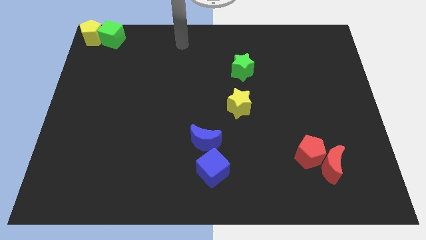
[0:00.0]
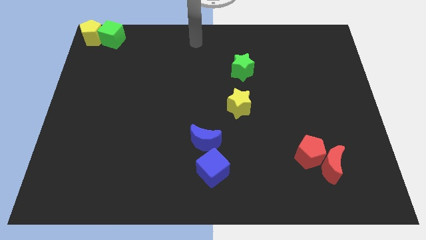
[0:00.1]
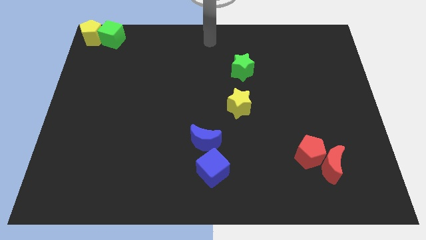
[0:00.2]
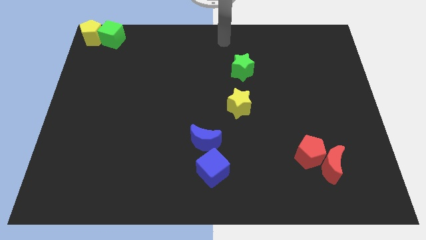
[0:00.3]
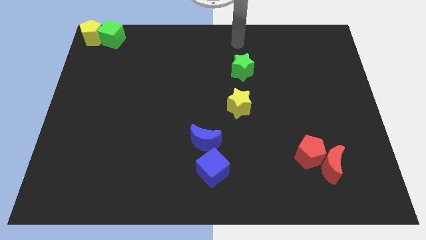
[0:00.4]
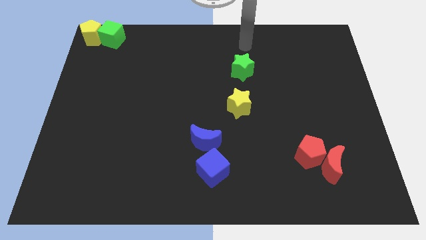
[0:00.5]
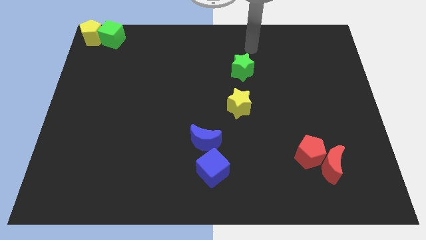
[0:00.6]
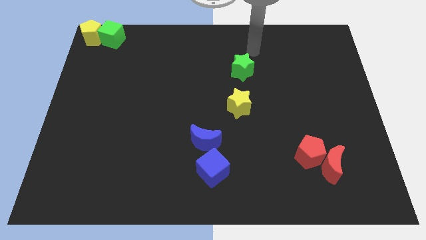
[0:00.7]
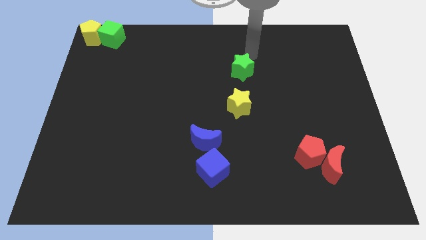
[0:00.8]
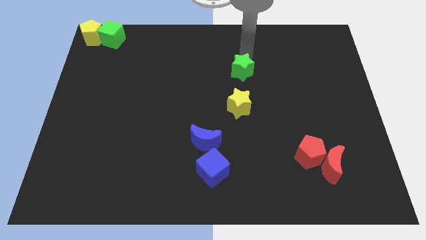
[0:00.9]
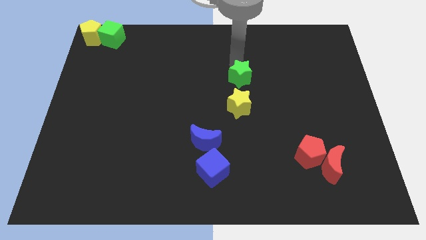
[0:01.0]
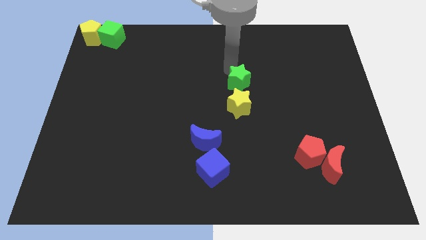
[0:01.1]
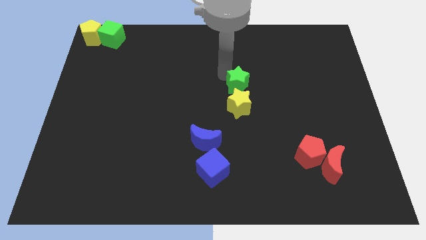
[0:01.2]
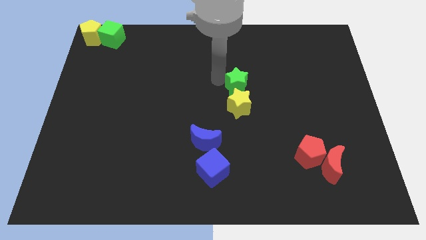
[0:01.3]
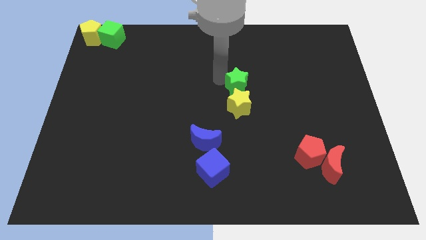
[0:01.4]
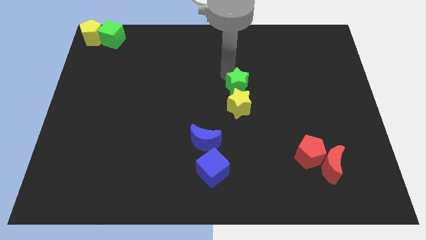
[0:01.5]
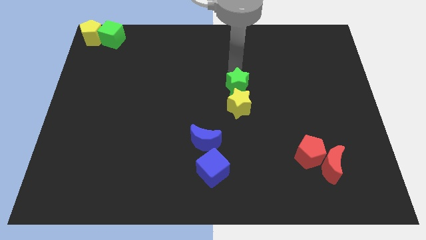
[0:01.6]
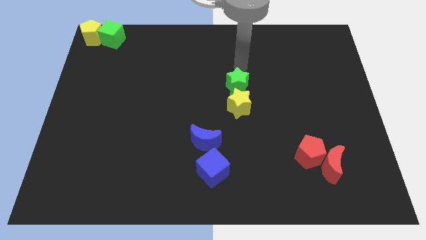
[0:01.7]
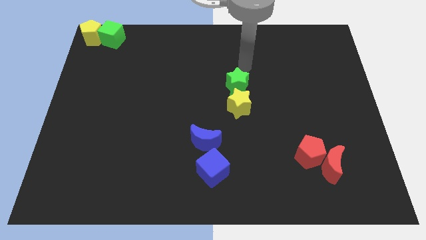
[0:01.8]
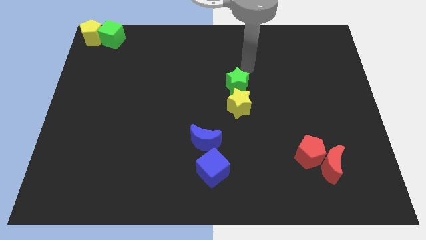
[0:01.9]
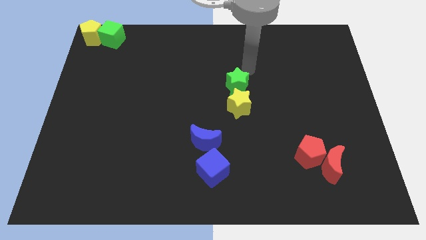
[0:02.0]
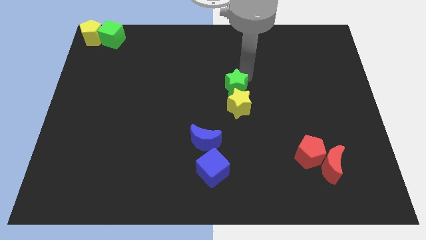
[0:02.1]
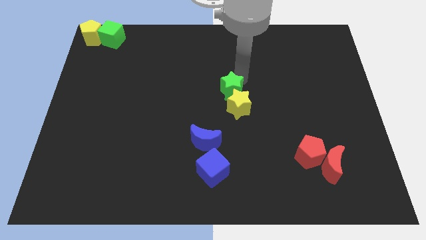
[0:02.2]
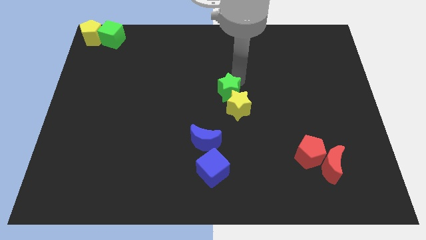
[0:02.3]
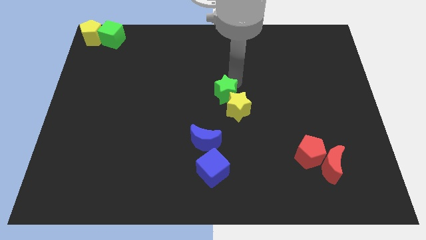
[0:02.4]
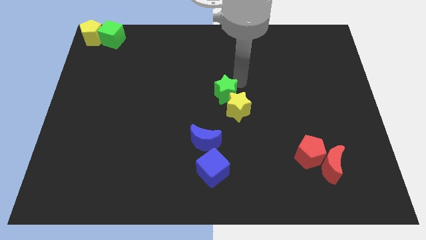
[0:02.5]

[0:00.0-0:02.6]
push the green star to the top of the yellow star

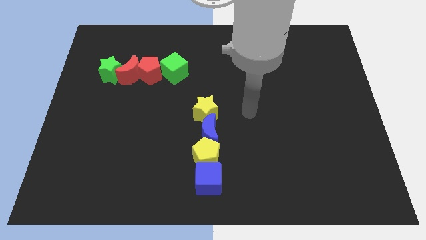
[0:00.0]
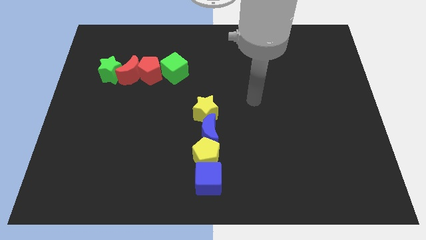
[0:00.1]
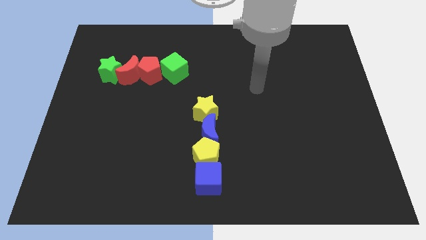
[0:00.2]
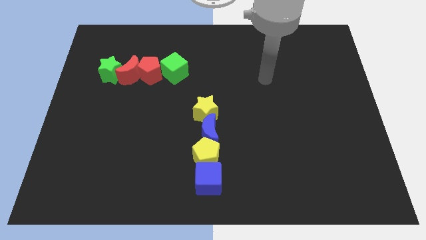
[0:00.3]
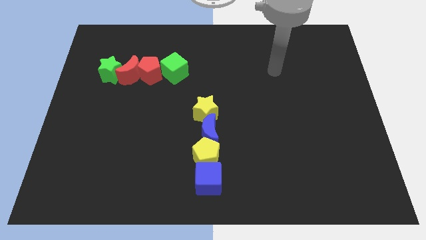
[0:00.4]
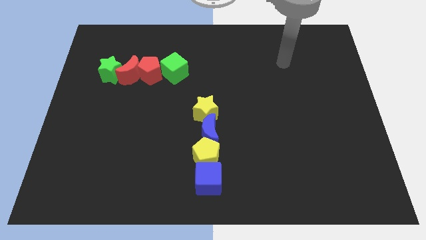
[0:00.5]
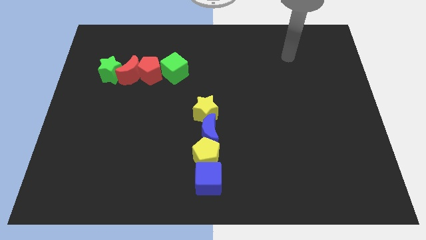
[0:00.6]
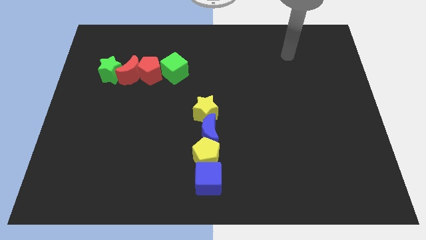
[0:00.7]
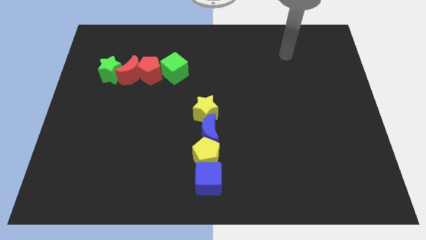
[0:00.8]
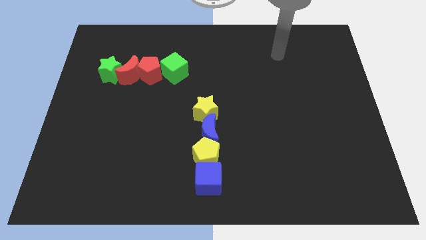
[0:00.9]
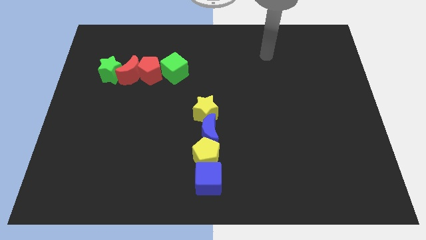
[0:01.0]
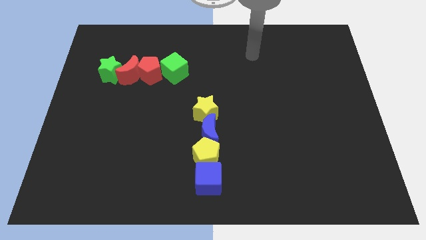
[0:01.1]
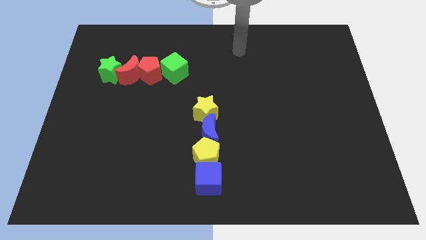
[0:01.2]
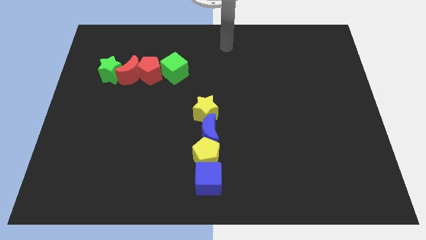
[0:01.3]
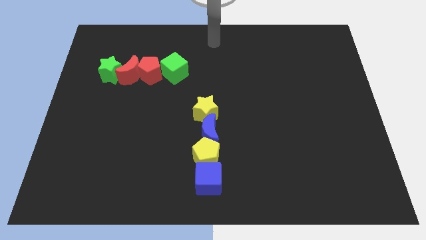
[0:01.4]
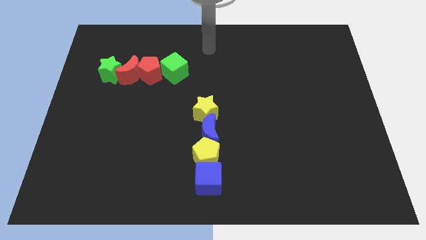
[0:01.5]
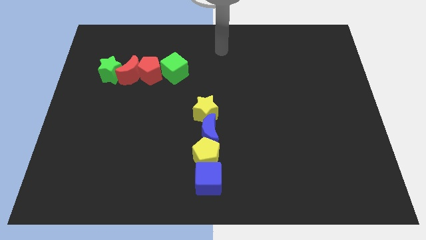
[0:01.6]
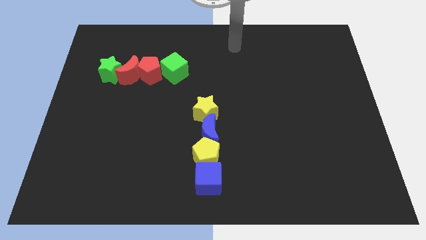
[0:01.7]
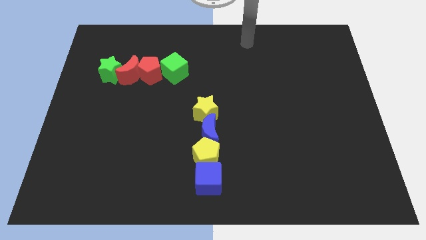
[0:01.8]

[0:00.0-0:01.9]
move your arm to the top center of the board

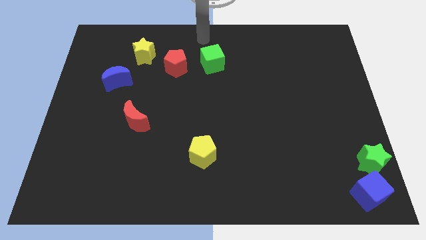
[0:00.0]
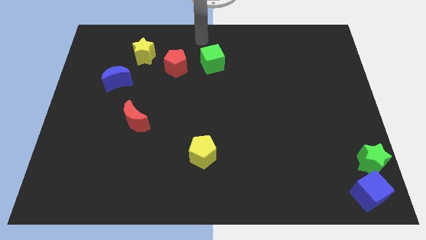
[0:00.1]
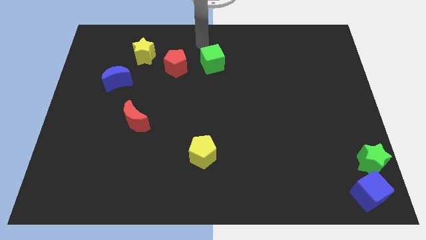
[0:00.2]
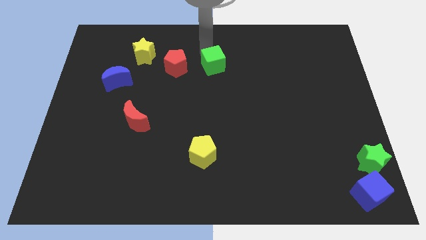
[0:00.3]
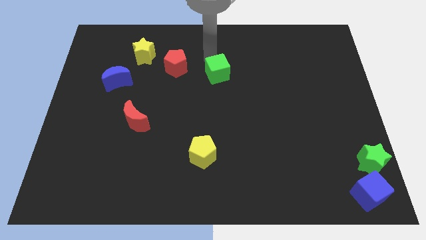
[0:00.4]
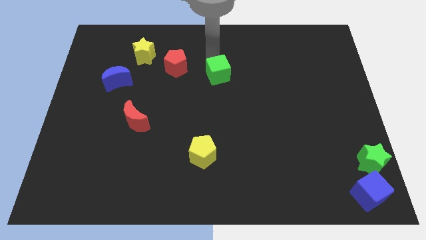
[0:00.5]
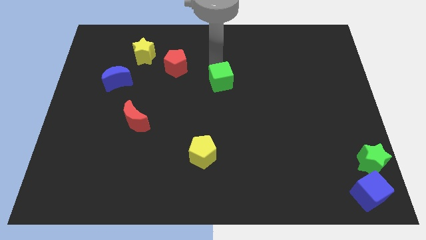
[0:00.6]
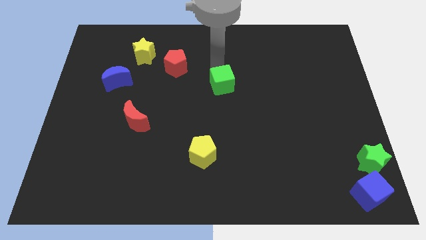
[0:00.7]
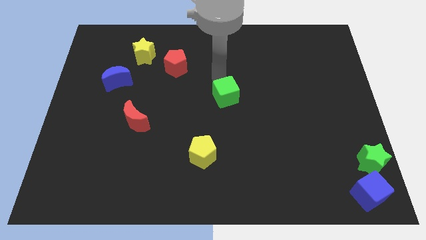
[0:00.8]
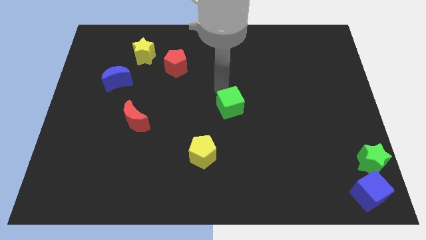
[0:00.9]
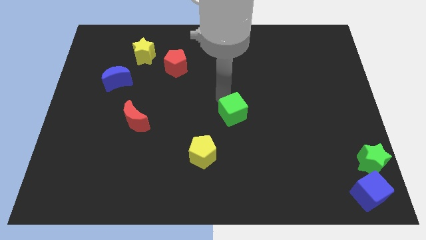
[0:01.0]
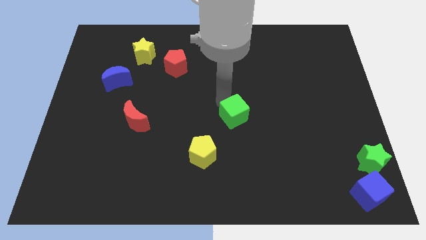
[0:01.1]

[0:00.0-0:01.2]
push the green cube to the center of the board

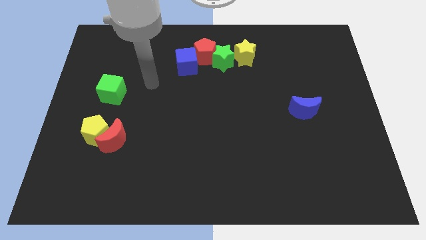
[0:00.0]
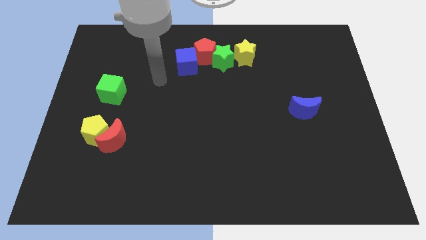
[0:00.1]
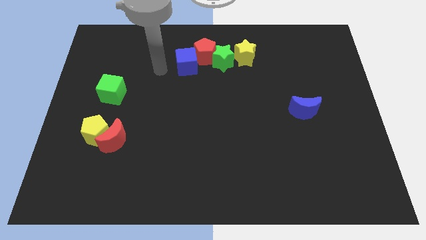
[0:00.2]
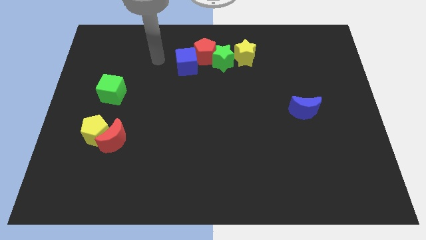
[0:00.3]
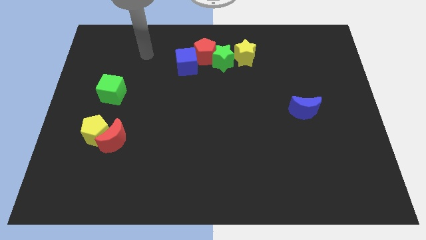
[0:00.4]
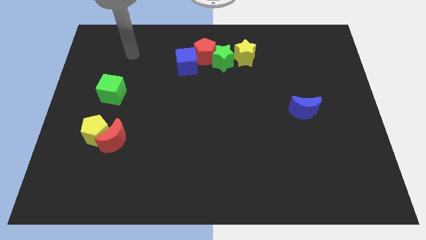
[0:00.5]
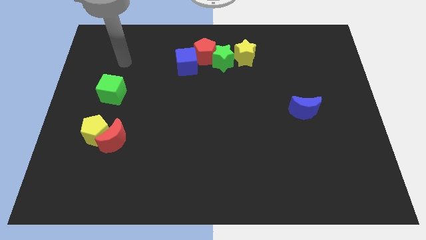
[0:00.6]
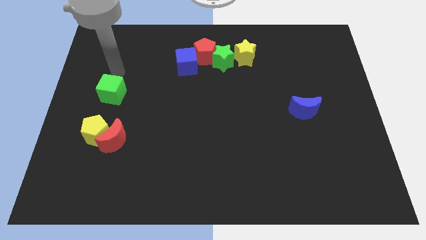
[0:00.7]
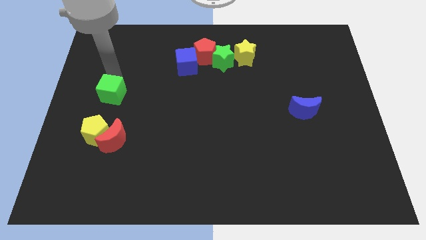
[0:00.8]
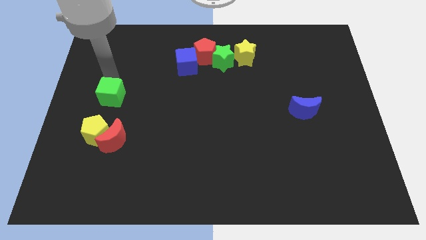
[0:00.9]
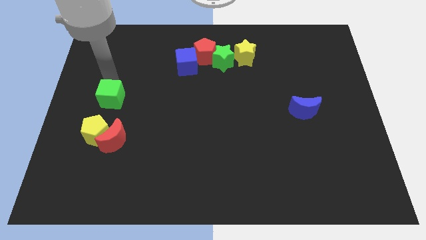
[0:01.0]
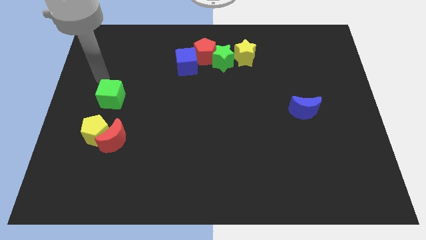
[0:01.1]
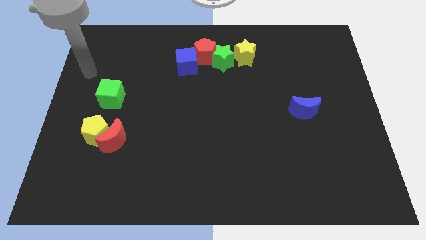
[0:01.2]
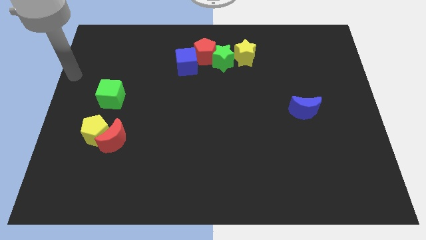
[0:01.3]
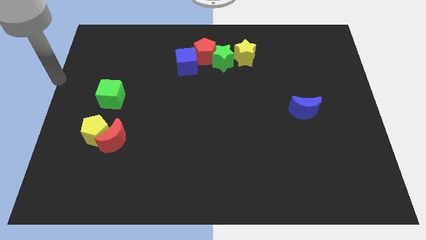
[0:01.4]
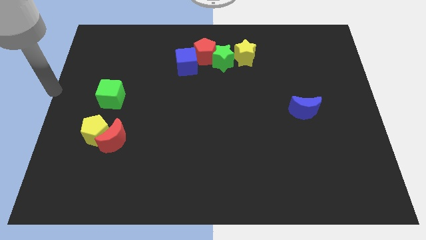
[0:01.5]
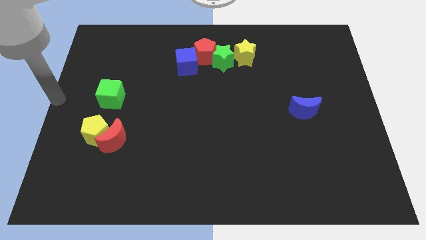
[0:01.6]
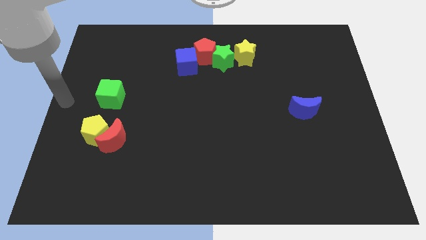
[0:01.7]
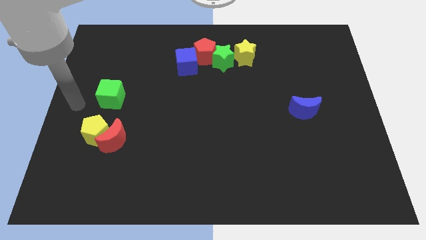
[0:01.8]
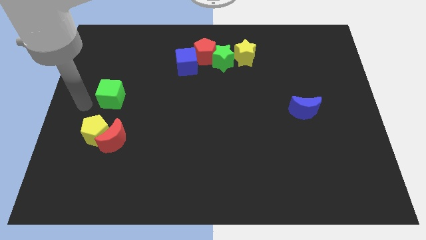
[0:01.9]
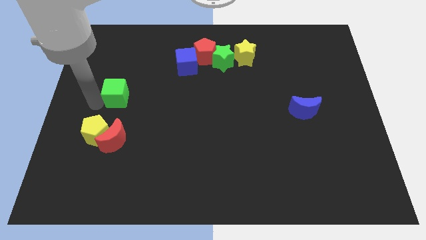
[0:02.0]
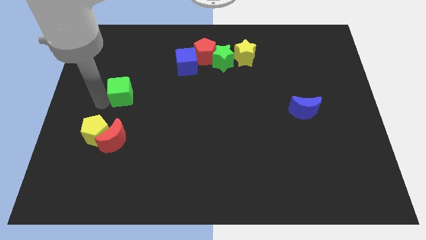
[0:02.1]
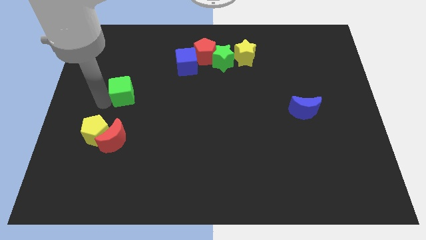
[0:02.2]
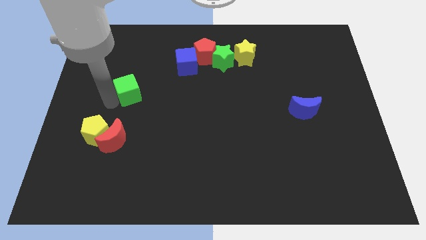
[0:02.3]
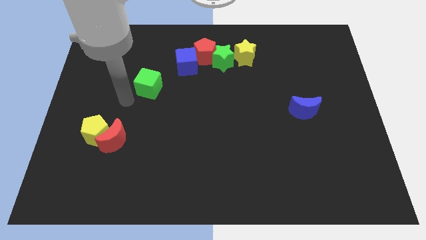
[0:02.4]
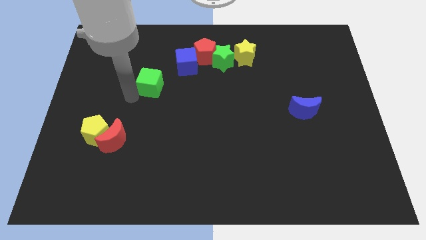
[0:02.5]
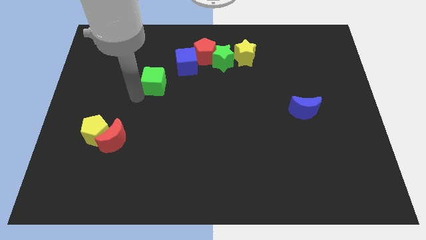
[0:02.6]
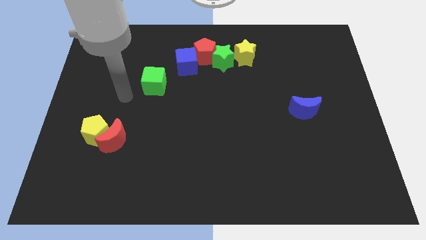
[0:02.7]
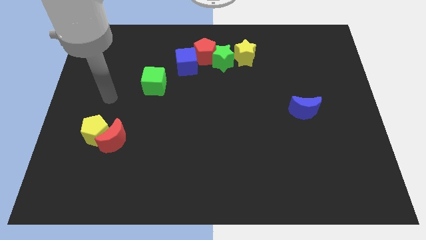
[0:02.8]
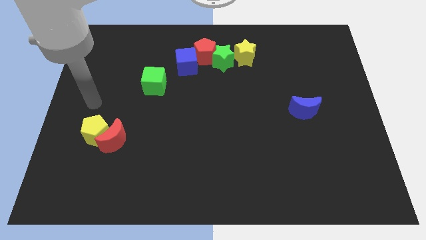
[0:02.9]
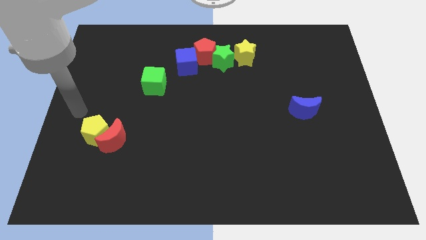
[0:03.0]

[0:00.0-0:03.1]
put the green cube at the bottom left side of the blue cube
